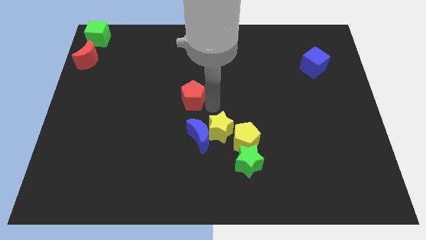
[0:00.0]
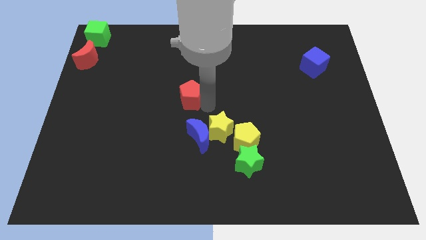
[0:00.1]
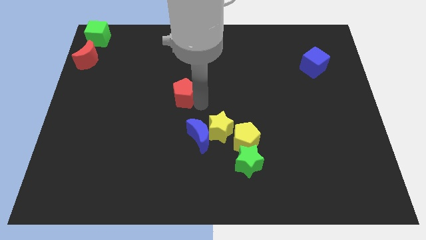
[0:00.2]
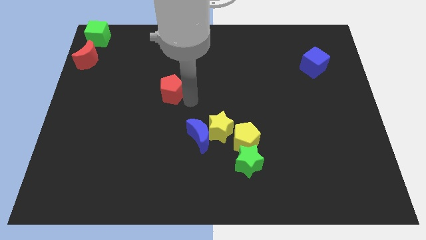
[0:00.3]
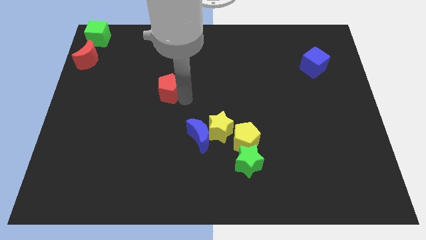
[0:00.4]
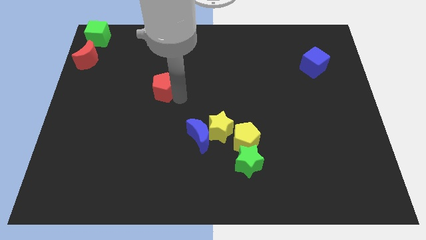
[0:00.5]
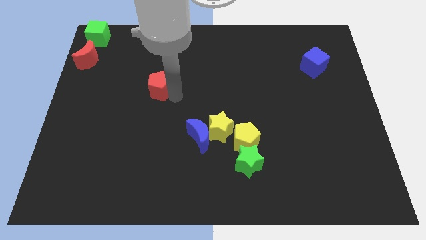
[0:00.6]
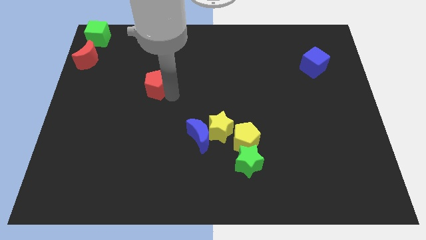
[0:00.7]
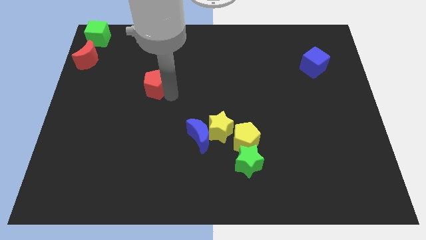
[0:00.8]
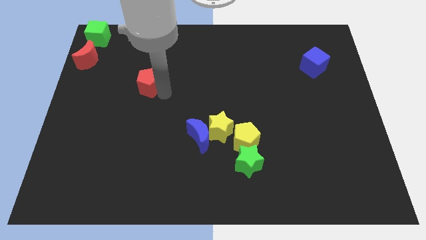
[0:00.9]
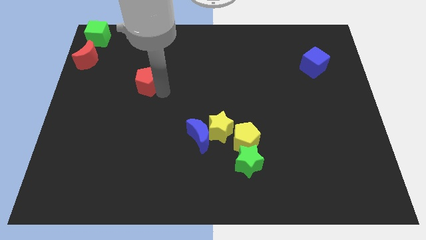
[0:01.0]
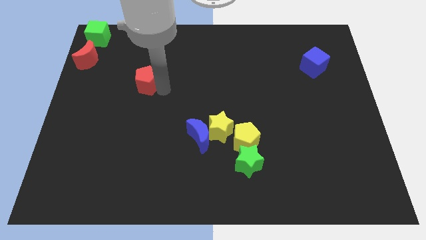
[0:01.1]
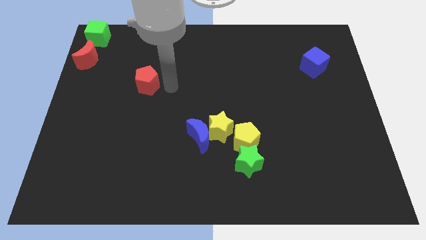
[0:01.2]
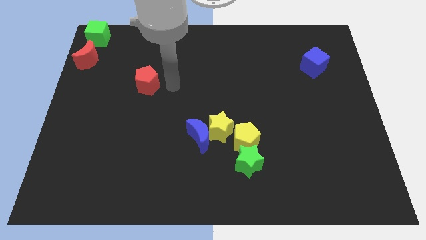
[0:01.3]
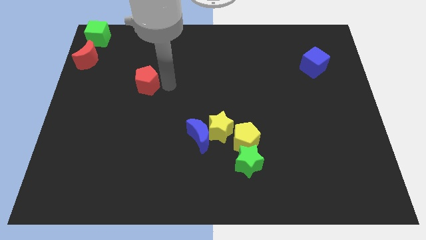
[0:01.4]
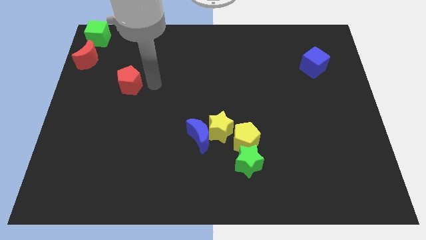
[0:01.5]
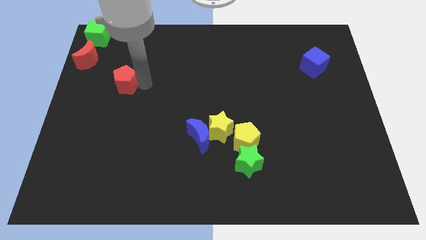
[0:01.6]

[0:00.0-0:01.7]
move the red pentagon to the left of the board

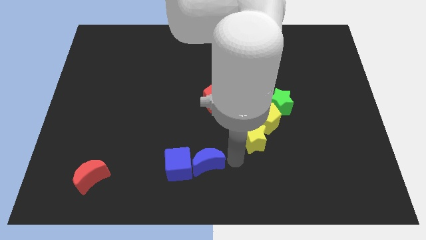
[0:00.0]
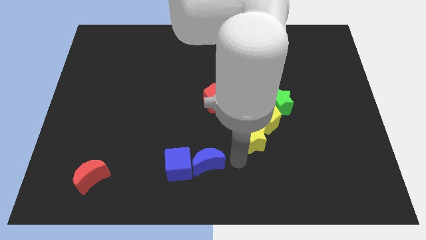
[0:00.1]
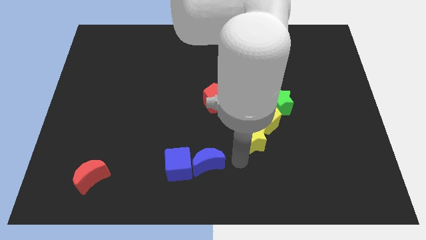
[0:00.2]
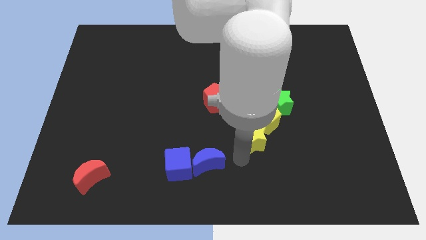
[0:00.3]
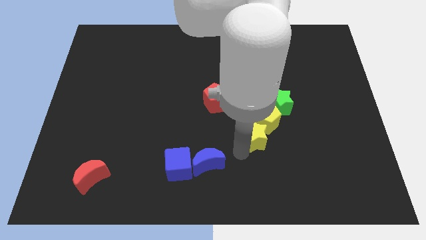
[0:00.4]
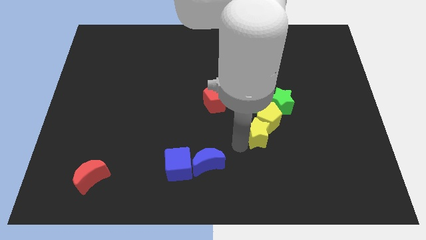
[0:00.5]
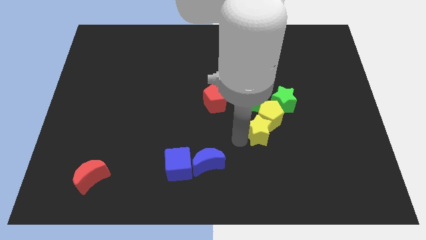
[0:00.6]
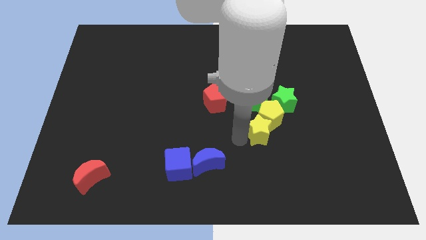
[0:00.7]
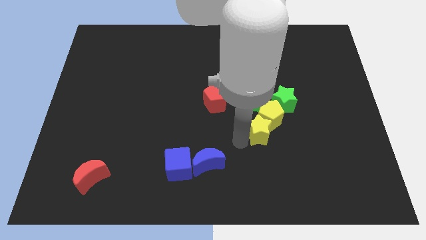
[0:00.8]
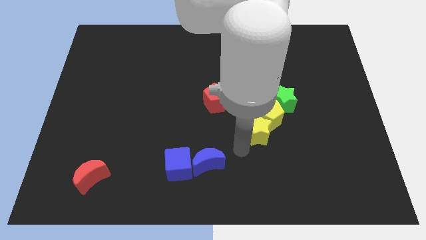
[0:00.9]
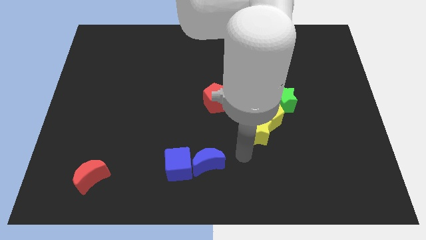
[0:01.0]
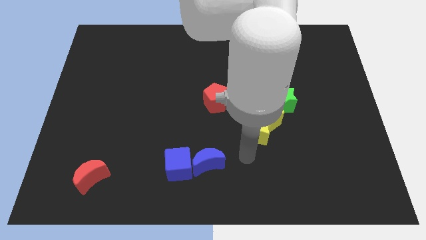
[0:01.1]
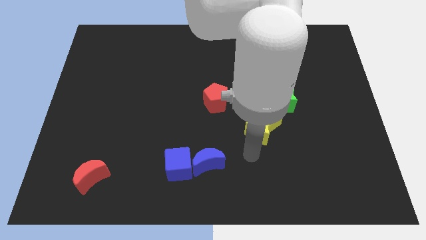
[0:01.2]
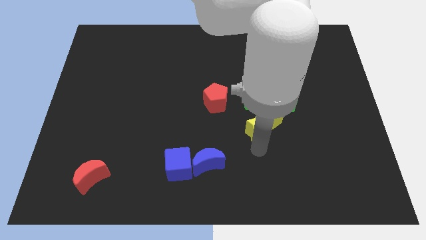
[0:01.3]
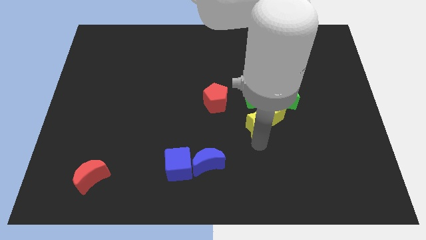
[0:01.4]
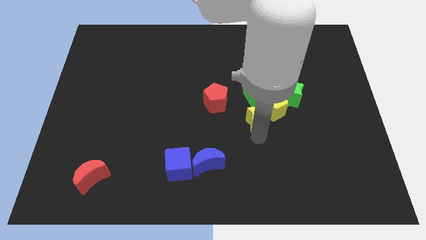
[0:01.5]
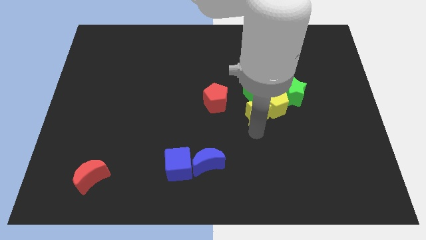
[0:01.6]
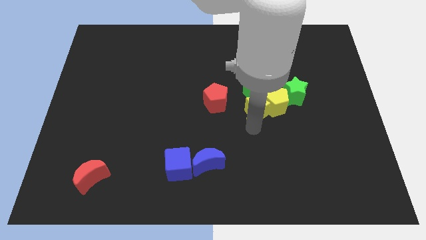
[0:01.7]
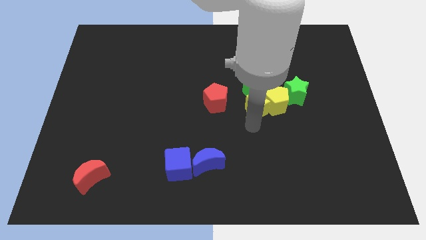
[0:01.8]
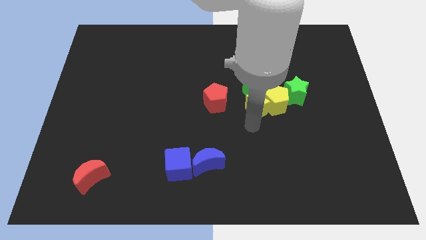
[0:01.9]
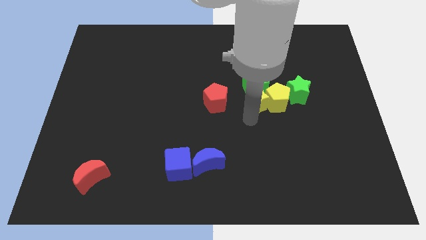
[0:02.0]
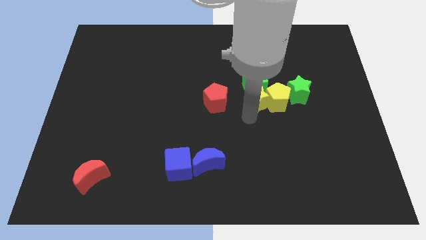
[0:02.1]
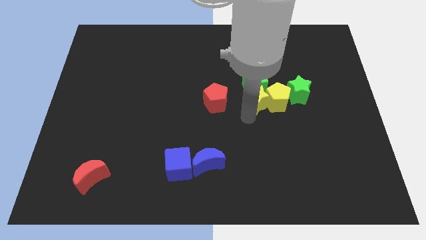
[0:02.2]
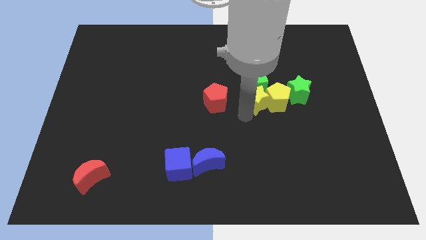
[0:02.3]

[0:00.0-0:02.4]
move the yellow blocks into green blocks

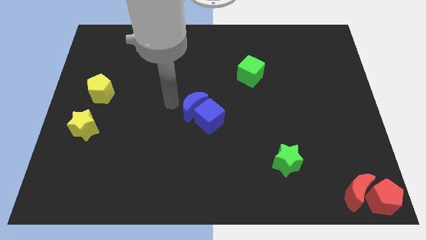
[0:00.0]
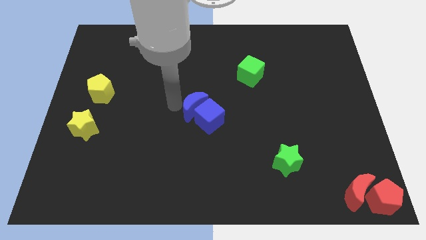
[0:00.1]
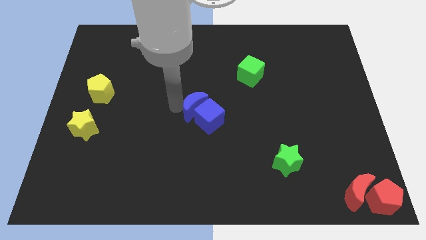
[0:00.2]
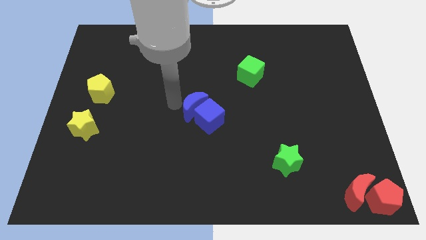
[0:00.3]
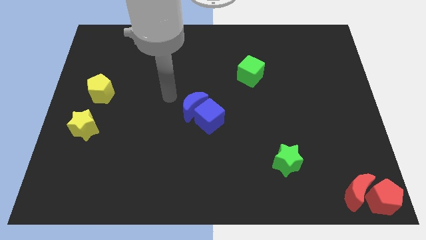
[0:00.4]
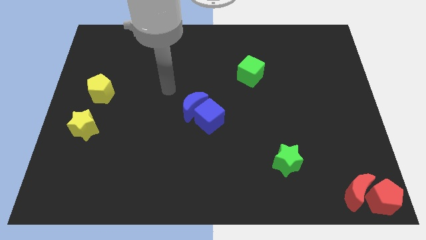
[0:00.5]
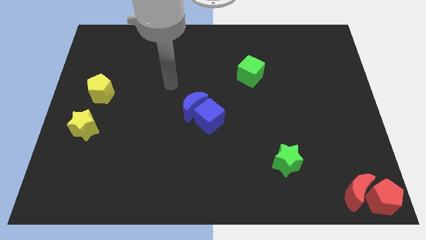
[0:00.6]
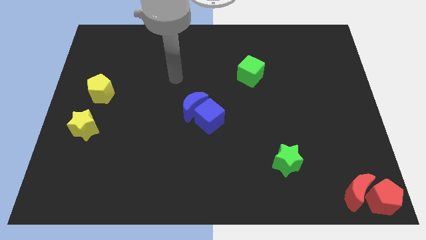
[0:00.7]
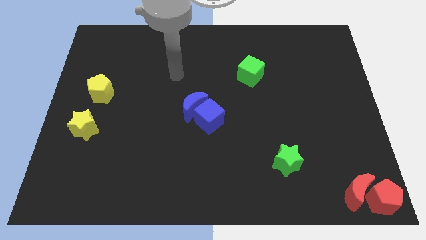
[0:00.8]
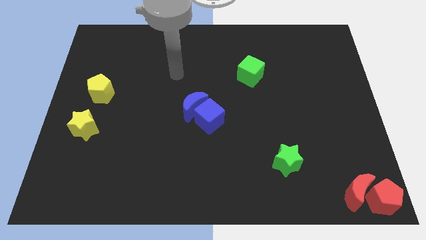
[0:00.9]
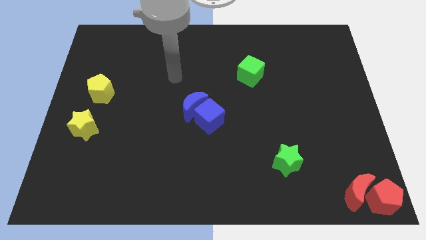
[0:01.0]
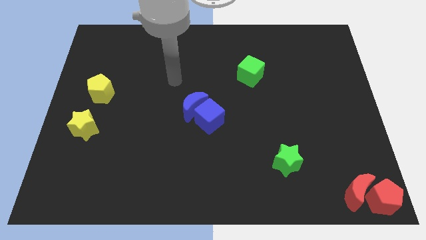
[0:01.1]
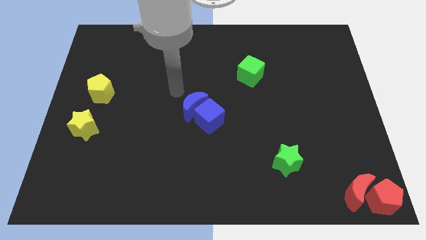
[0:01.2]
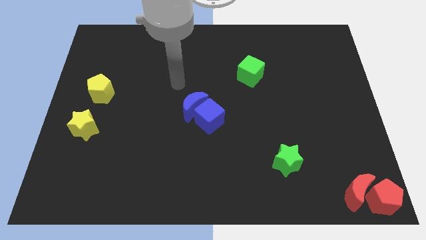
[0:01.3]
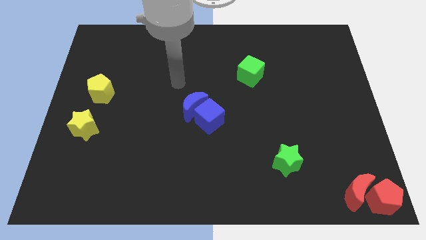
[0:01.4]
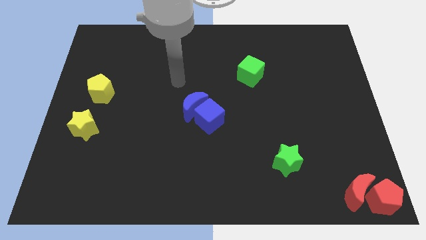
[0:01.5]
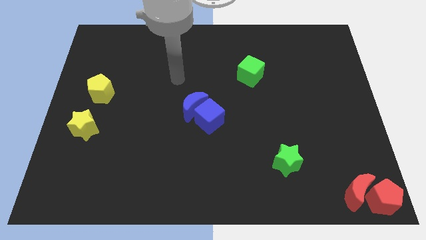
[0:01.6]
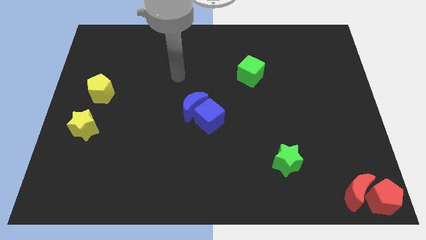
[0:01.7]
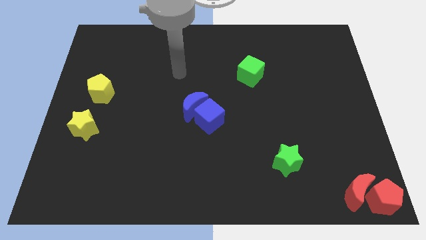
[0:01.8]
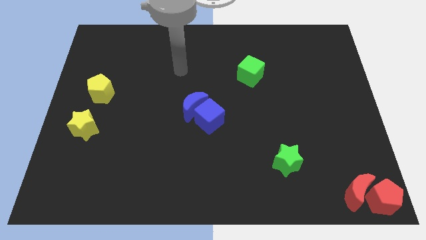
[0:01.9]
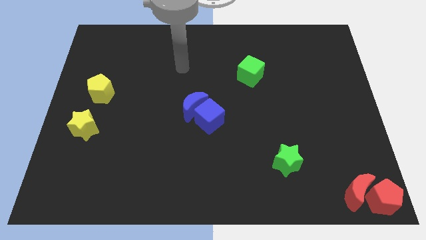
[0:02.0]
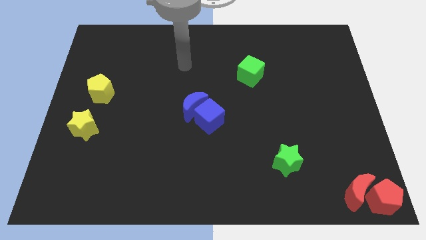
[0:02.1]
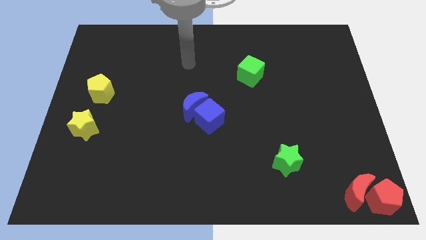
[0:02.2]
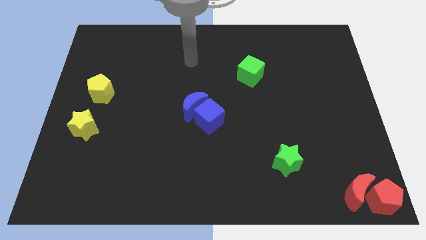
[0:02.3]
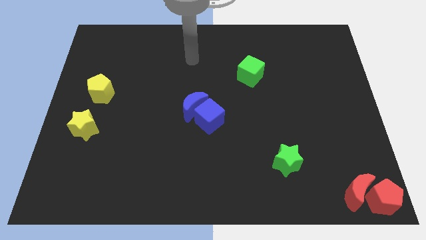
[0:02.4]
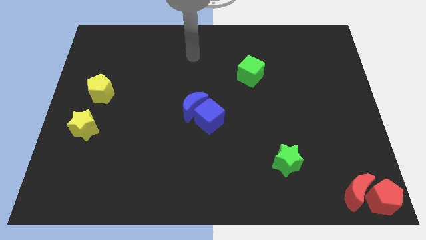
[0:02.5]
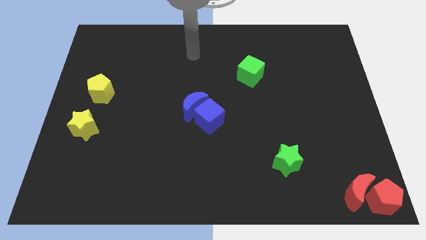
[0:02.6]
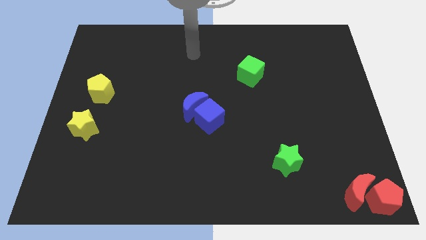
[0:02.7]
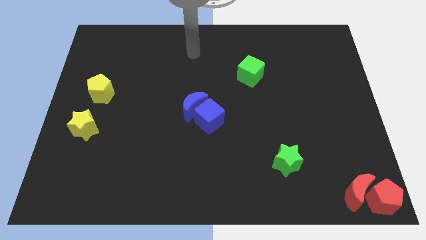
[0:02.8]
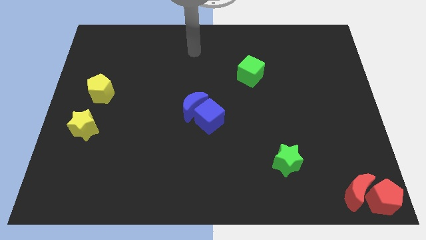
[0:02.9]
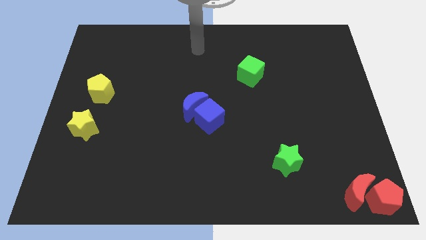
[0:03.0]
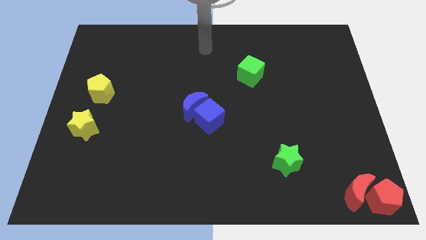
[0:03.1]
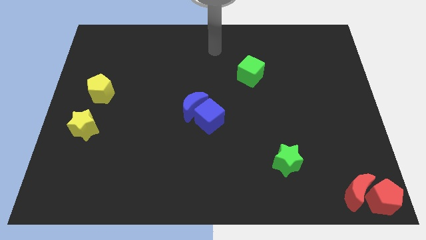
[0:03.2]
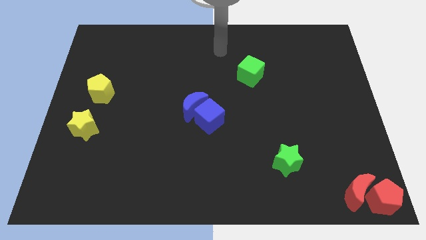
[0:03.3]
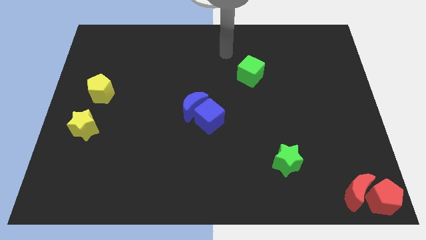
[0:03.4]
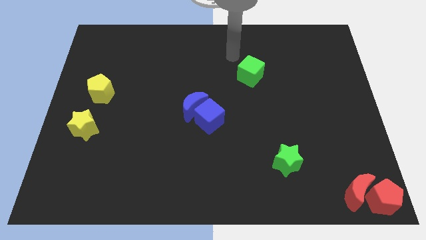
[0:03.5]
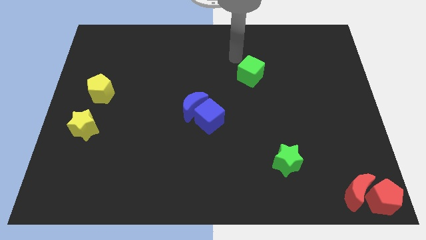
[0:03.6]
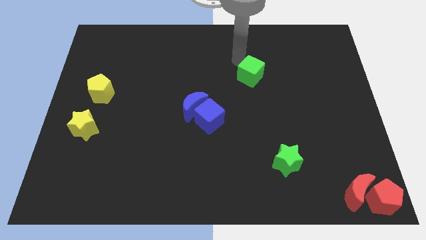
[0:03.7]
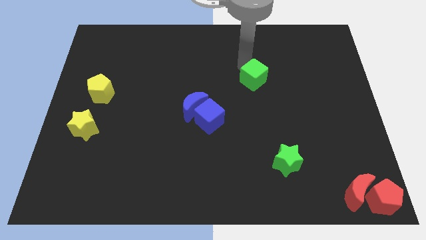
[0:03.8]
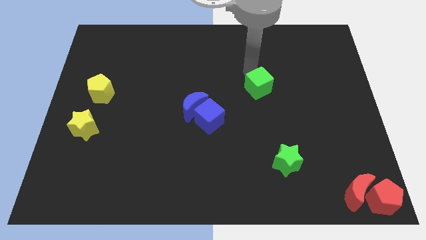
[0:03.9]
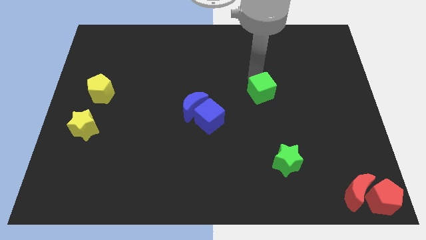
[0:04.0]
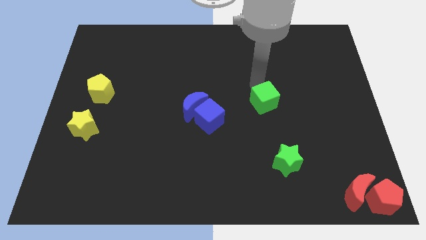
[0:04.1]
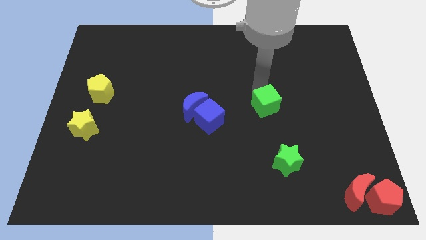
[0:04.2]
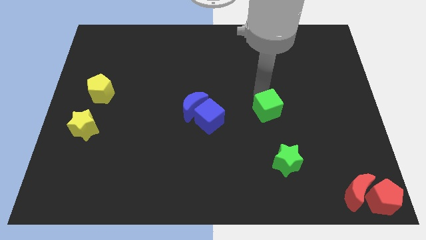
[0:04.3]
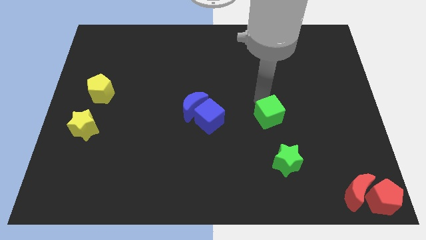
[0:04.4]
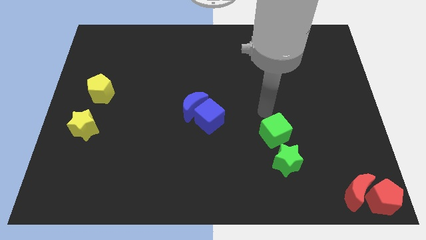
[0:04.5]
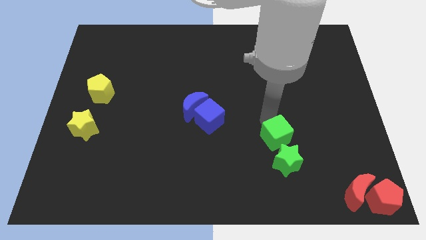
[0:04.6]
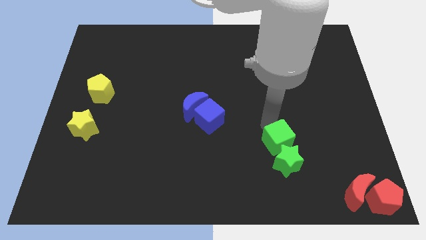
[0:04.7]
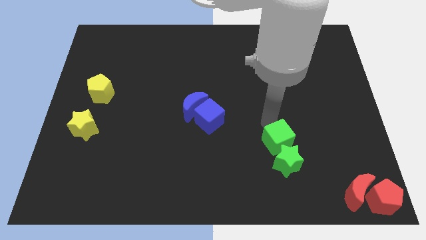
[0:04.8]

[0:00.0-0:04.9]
push the green cube towards the green star

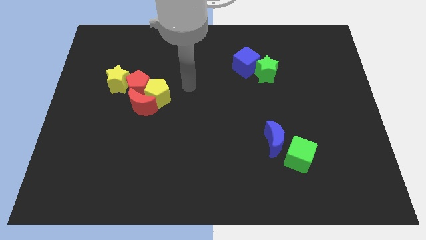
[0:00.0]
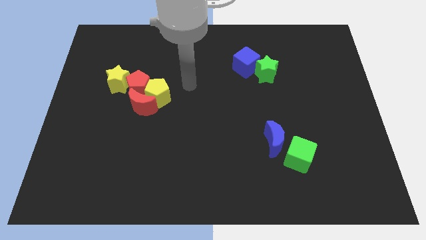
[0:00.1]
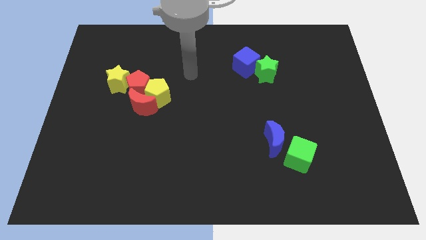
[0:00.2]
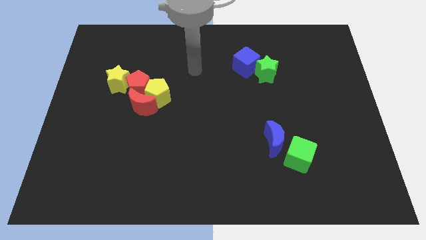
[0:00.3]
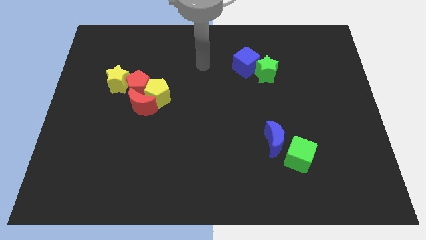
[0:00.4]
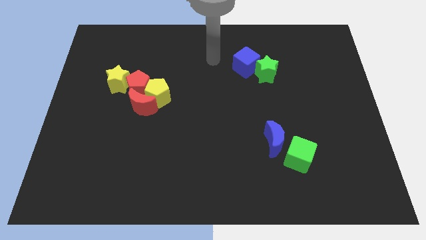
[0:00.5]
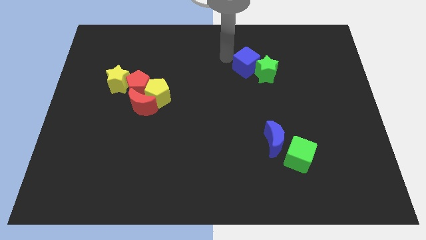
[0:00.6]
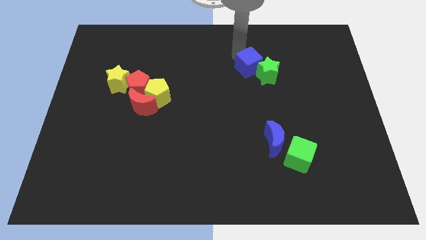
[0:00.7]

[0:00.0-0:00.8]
point your arm at the top left of the blue cube
